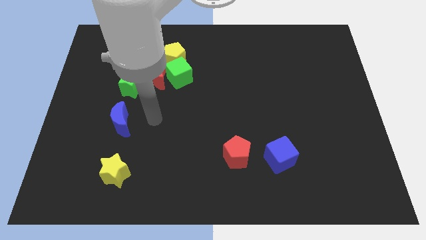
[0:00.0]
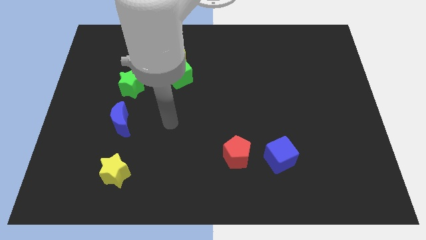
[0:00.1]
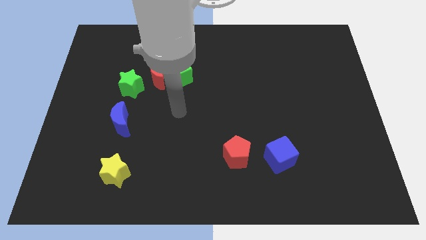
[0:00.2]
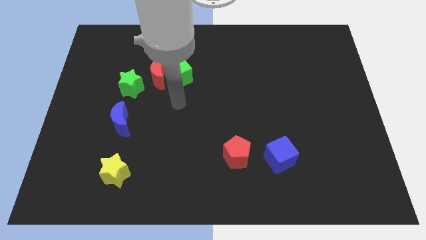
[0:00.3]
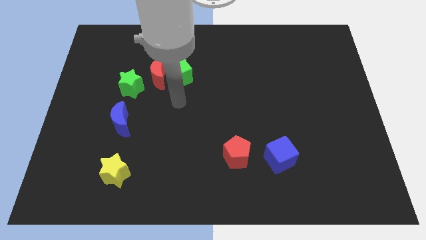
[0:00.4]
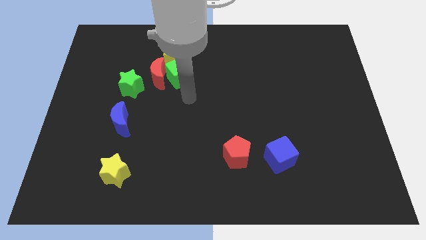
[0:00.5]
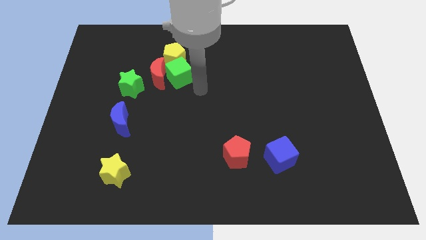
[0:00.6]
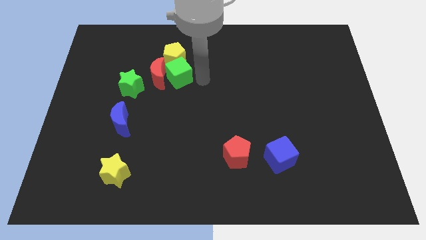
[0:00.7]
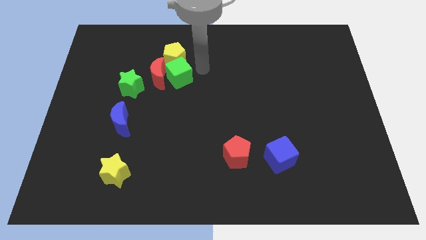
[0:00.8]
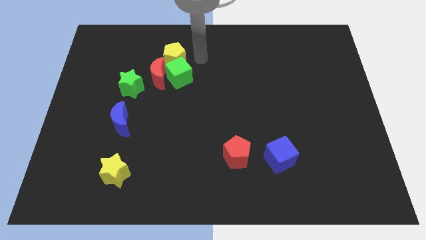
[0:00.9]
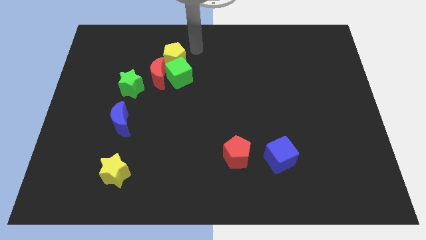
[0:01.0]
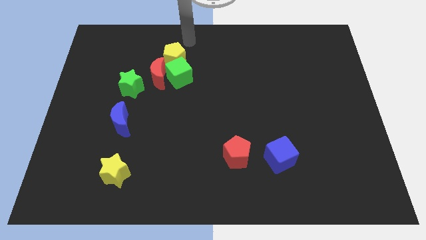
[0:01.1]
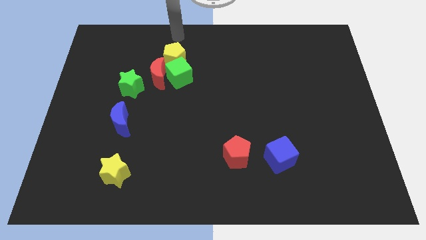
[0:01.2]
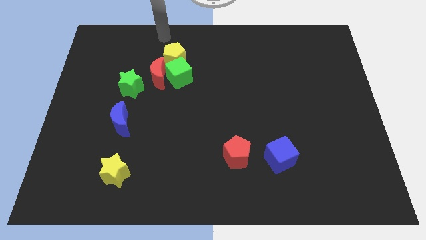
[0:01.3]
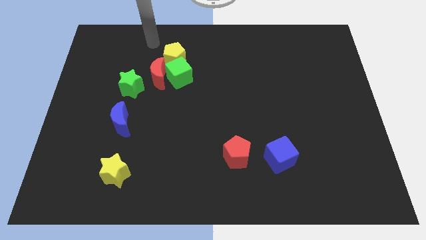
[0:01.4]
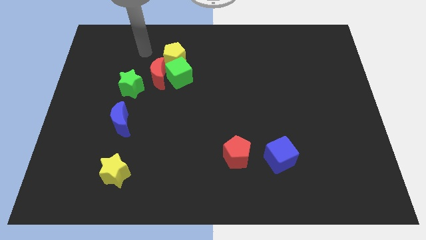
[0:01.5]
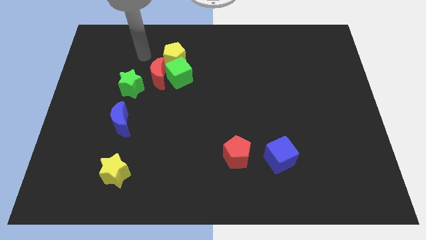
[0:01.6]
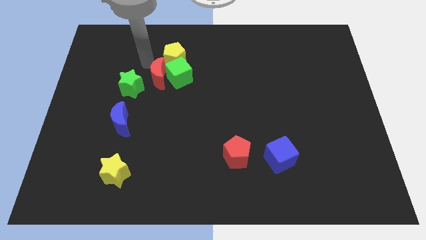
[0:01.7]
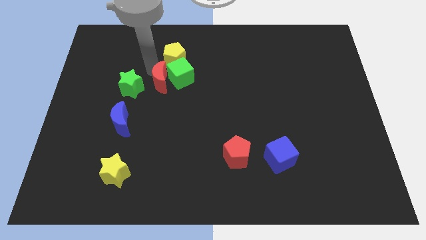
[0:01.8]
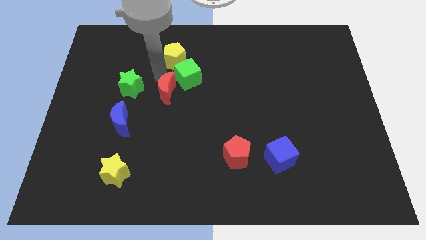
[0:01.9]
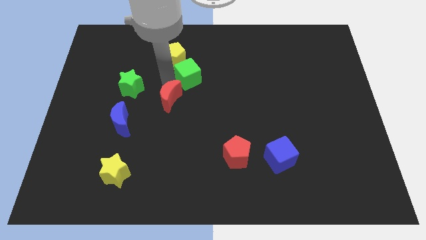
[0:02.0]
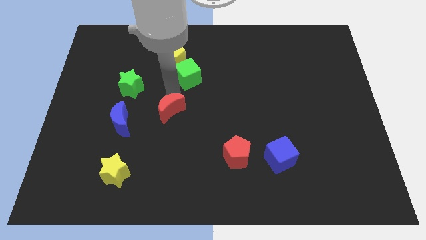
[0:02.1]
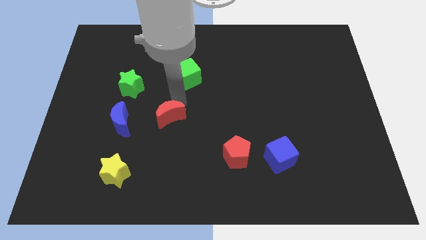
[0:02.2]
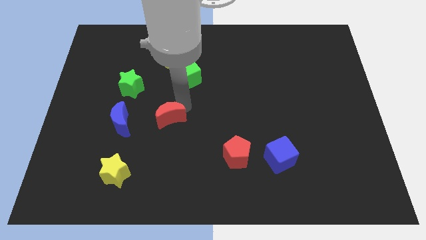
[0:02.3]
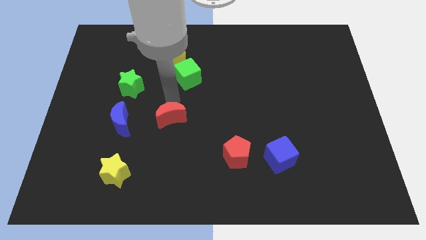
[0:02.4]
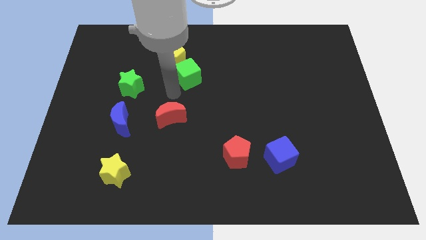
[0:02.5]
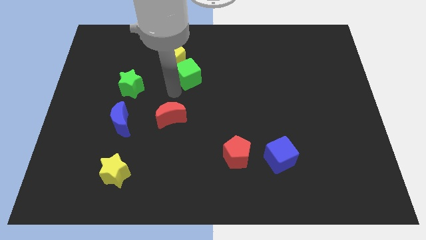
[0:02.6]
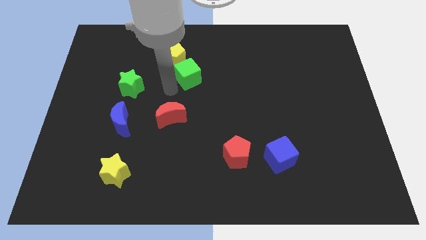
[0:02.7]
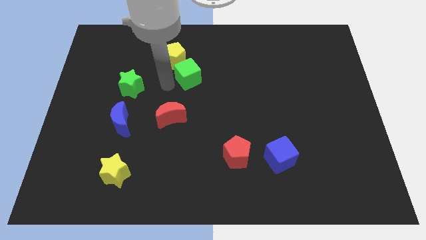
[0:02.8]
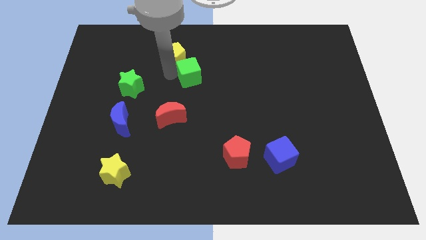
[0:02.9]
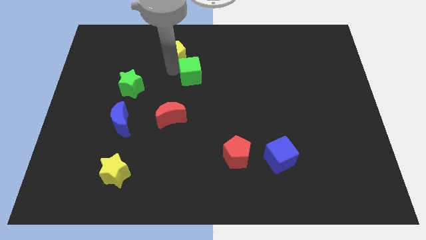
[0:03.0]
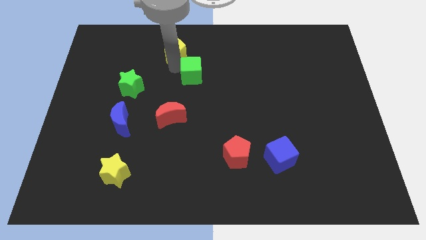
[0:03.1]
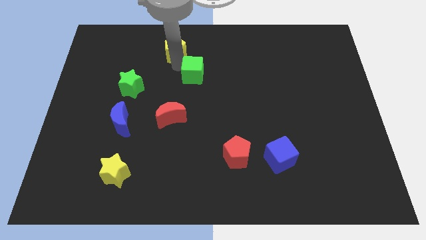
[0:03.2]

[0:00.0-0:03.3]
move the red crescent to the right of the blue crescent

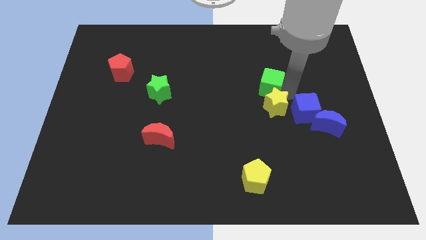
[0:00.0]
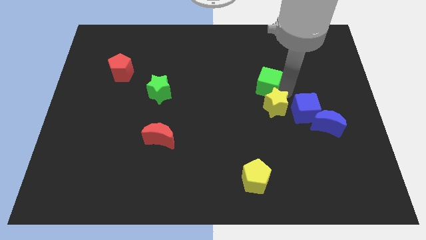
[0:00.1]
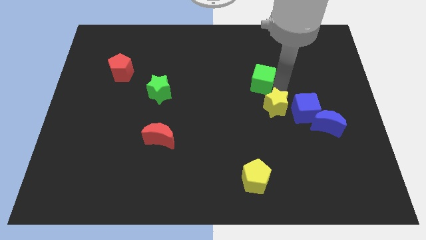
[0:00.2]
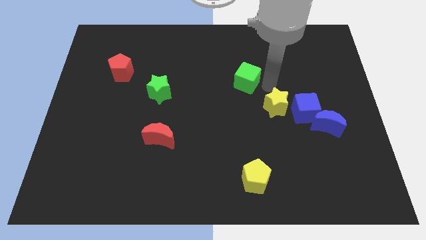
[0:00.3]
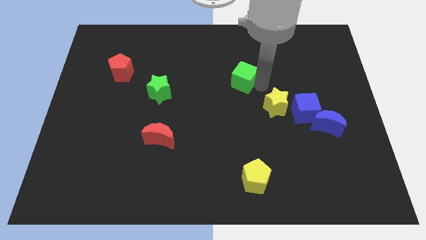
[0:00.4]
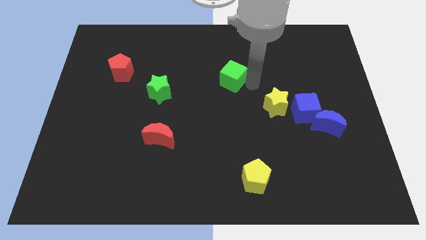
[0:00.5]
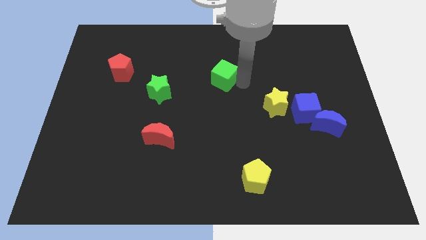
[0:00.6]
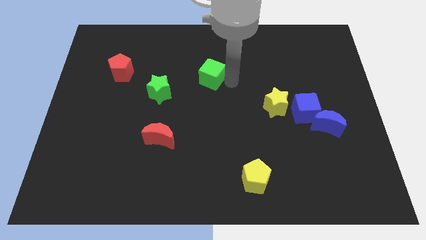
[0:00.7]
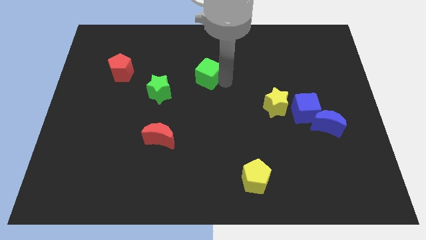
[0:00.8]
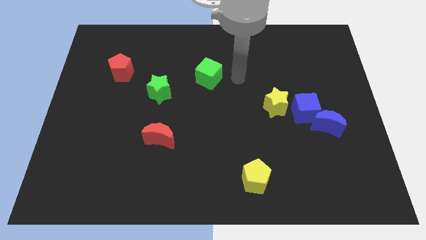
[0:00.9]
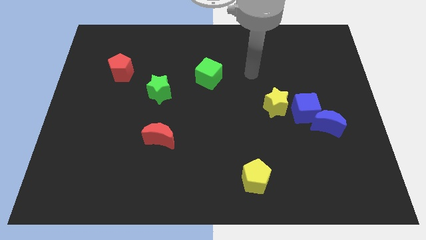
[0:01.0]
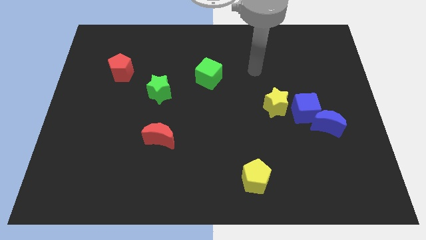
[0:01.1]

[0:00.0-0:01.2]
move the green cube towards the green star

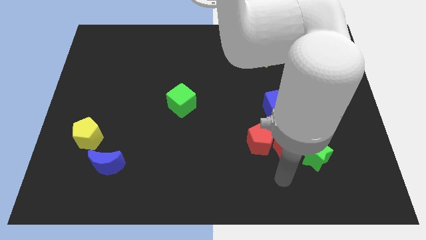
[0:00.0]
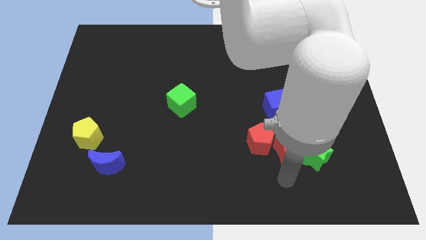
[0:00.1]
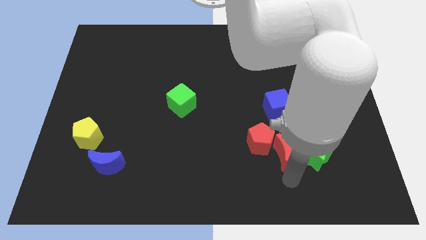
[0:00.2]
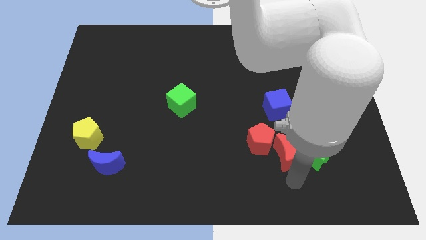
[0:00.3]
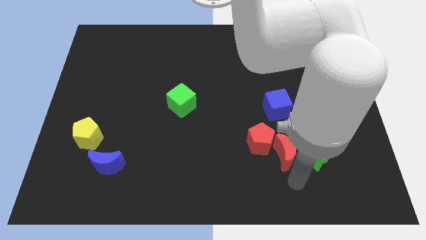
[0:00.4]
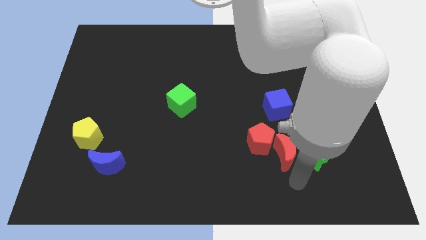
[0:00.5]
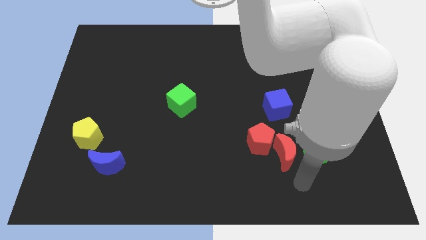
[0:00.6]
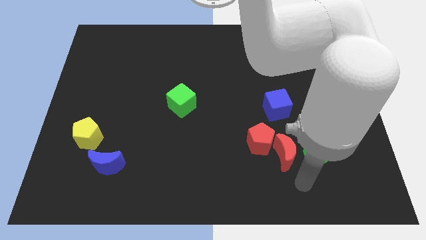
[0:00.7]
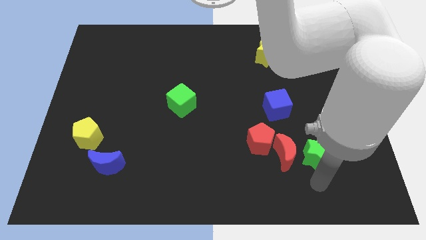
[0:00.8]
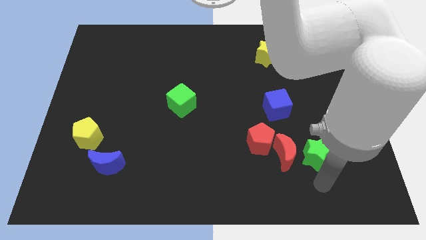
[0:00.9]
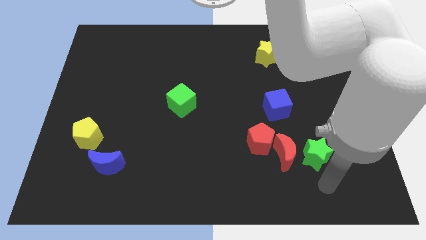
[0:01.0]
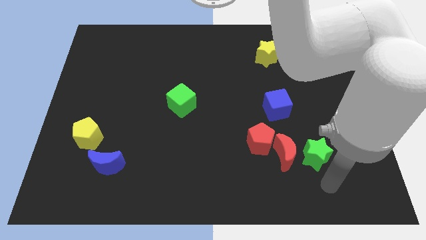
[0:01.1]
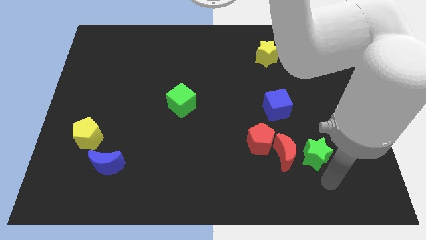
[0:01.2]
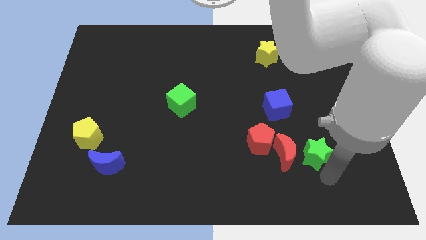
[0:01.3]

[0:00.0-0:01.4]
move the arm towards the green star

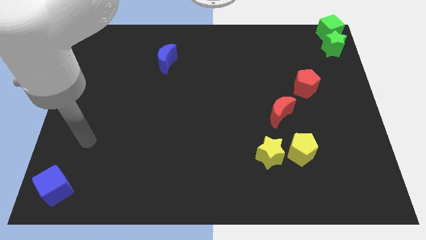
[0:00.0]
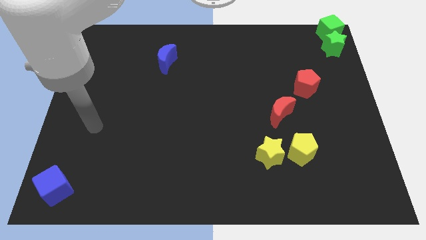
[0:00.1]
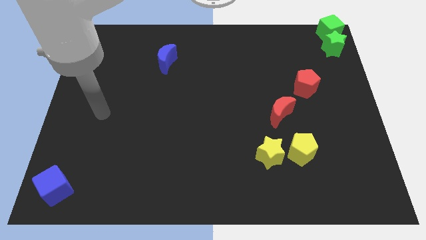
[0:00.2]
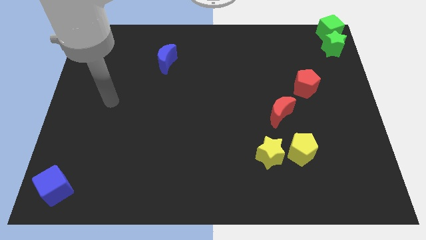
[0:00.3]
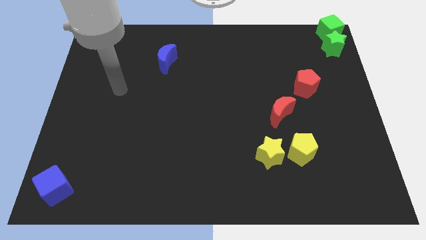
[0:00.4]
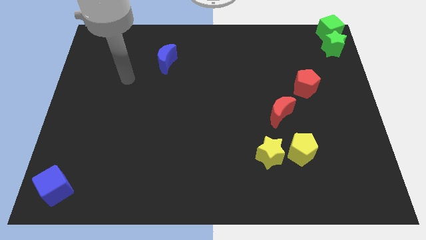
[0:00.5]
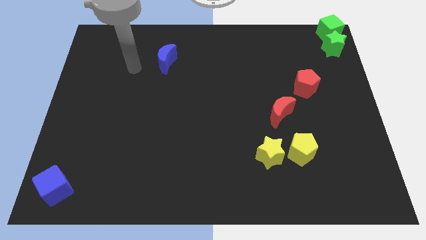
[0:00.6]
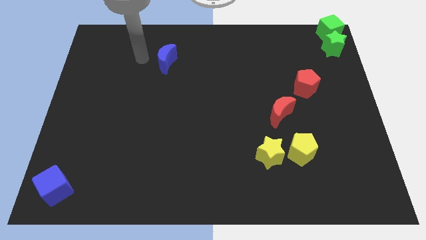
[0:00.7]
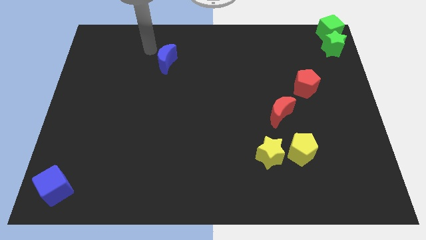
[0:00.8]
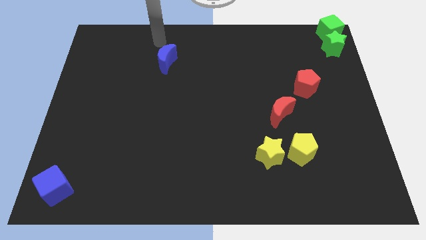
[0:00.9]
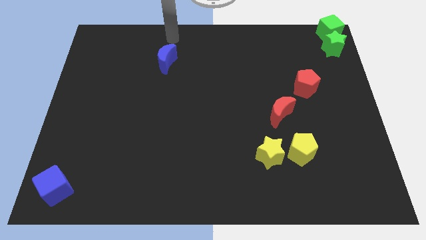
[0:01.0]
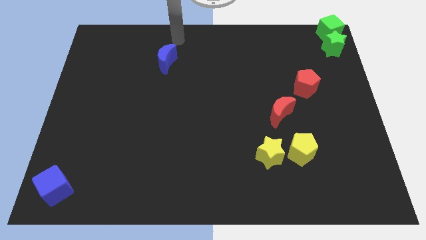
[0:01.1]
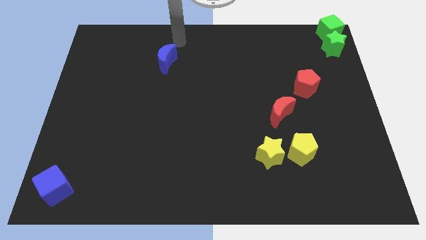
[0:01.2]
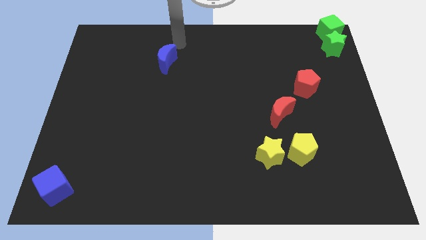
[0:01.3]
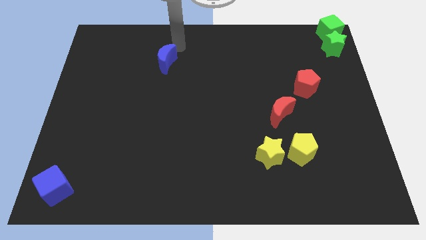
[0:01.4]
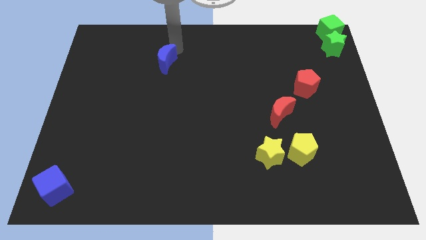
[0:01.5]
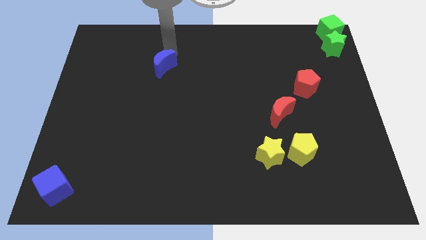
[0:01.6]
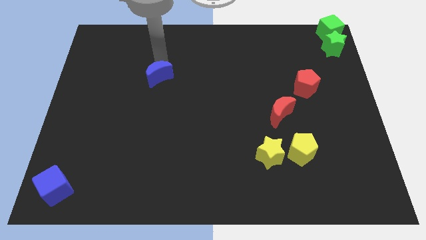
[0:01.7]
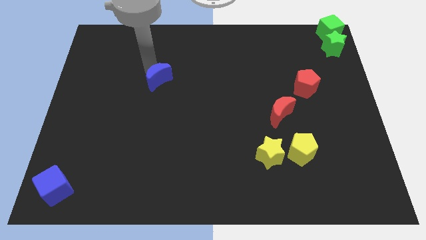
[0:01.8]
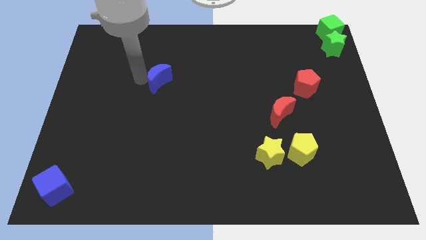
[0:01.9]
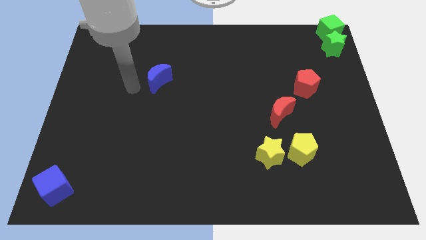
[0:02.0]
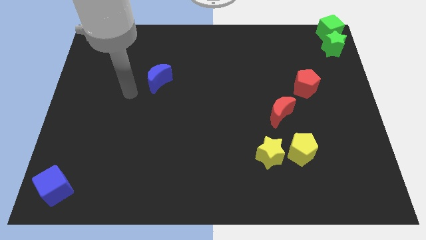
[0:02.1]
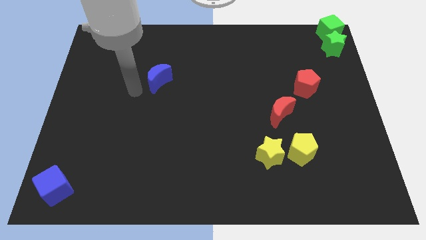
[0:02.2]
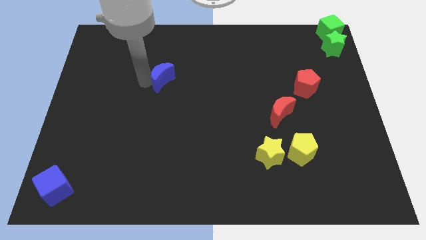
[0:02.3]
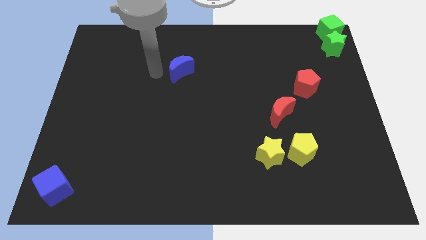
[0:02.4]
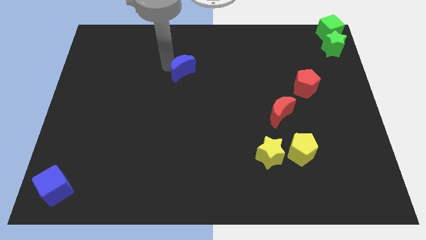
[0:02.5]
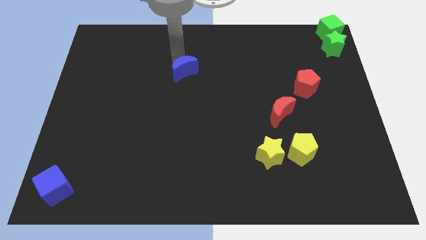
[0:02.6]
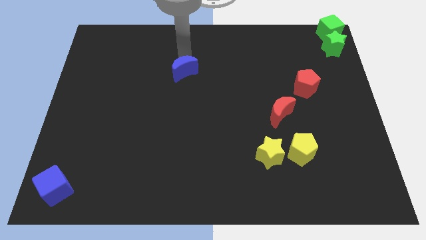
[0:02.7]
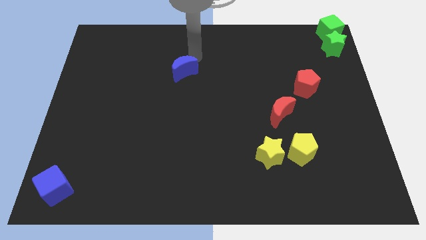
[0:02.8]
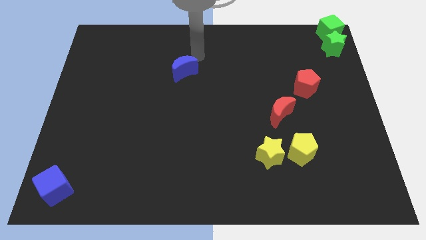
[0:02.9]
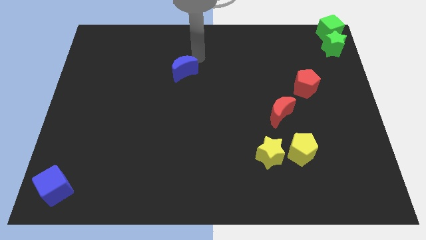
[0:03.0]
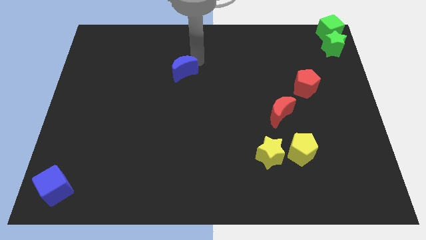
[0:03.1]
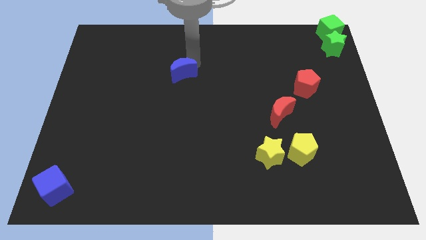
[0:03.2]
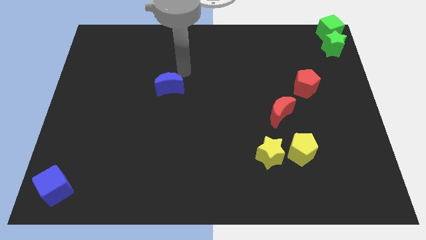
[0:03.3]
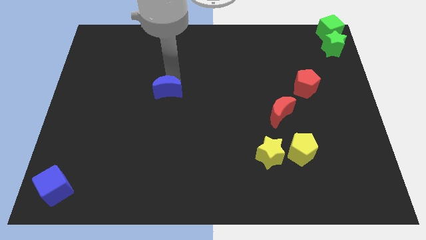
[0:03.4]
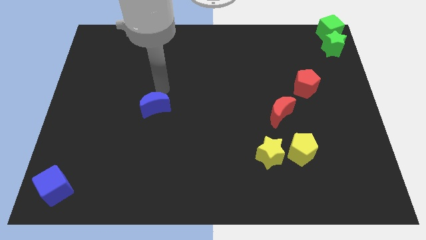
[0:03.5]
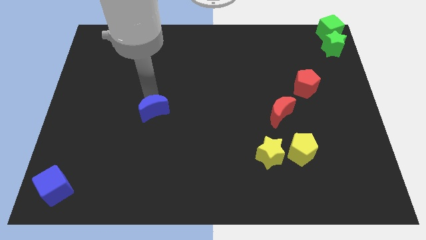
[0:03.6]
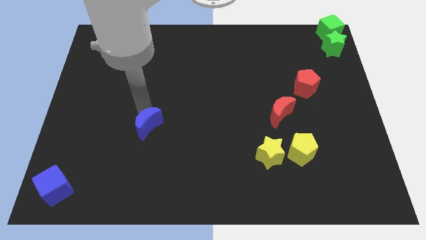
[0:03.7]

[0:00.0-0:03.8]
move the blue crescent towards the blue cube
